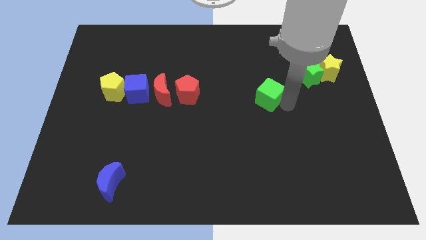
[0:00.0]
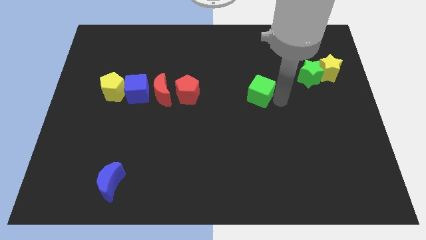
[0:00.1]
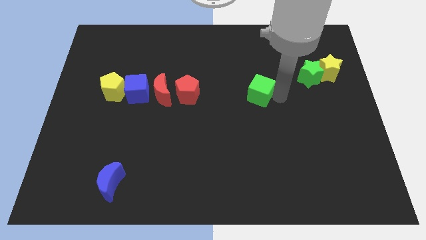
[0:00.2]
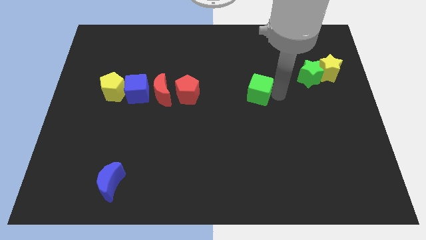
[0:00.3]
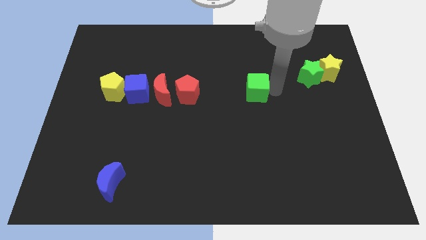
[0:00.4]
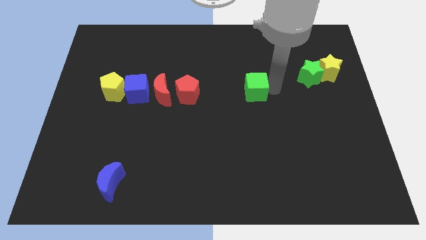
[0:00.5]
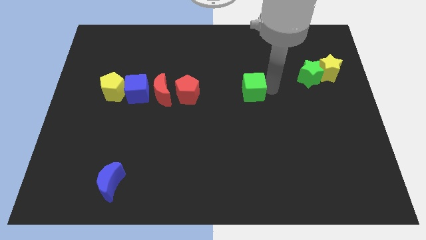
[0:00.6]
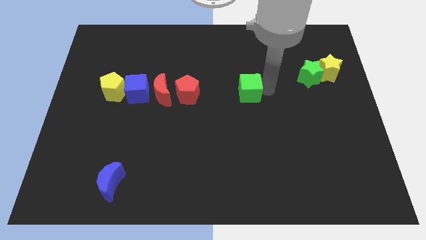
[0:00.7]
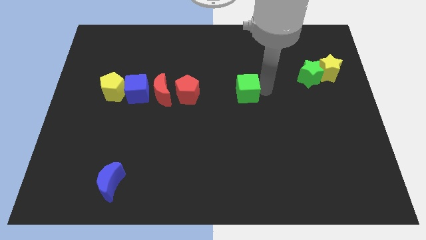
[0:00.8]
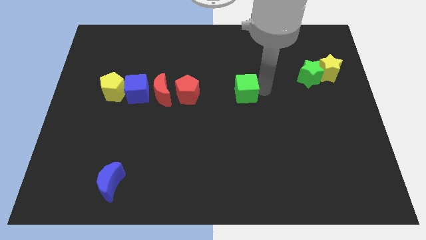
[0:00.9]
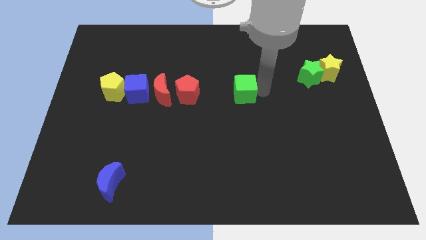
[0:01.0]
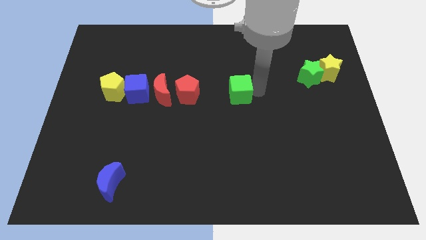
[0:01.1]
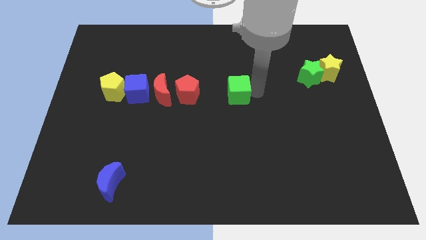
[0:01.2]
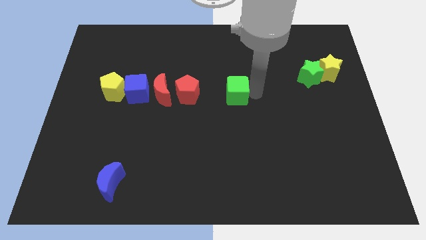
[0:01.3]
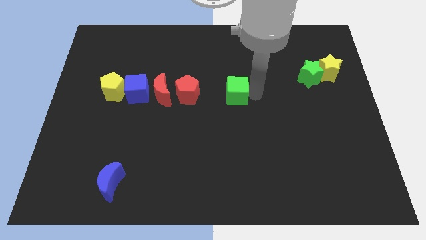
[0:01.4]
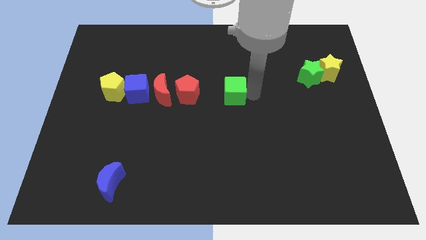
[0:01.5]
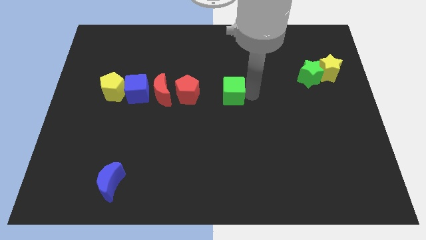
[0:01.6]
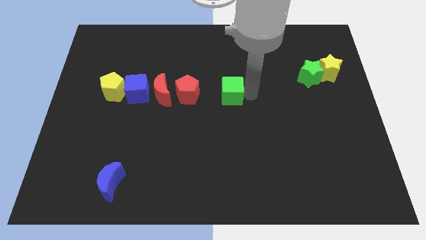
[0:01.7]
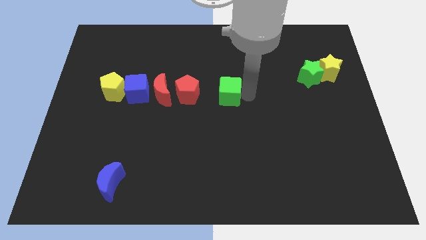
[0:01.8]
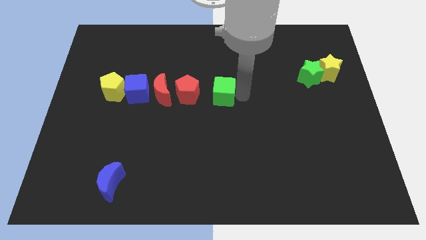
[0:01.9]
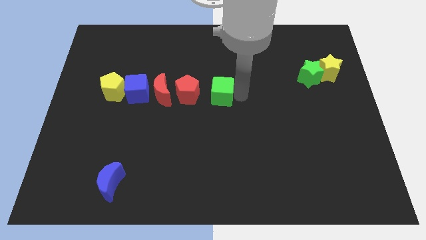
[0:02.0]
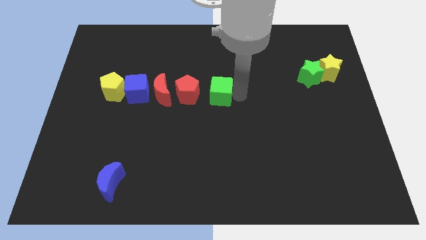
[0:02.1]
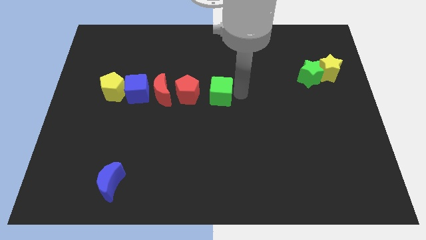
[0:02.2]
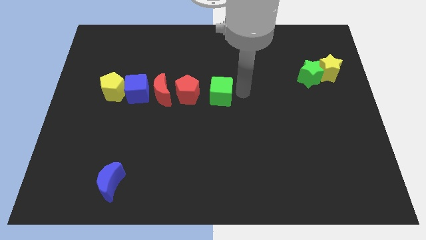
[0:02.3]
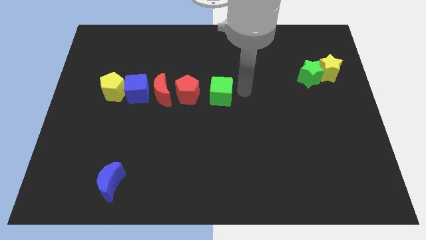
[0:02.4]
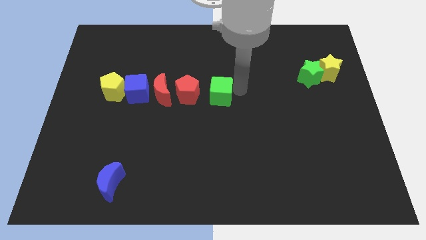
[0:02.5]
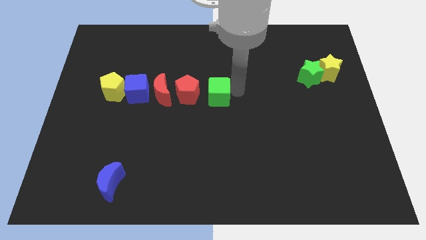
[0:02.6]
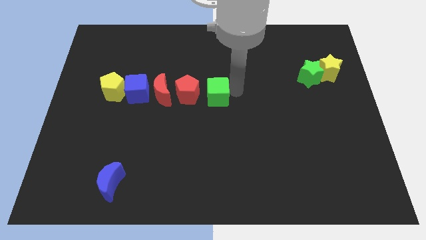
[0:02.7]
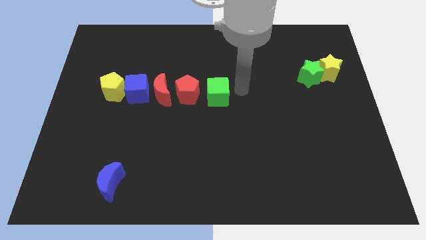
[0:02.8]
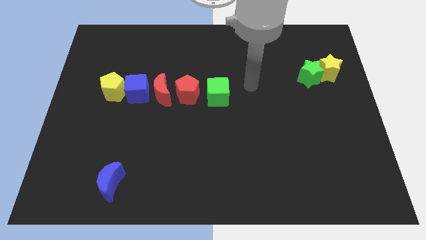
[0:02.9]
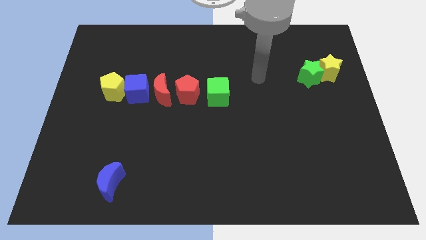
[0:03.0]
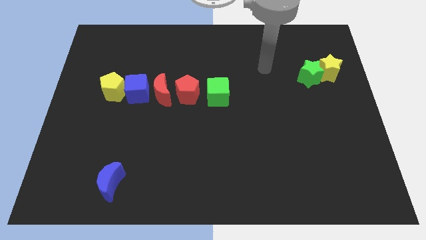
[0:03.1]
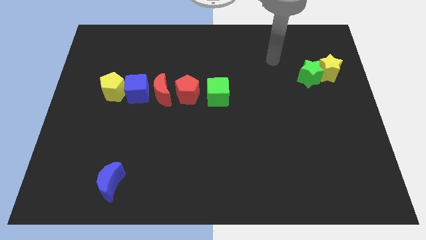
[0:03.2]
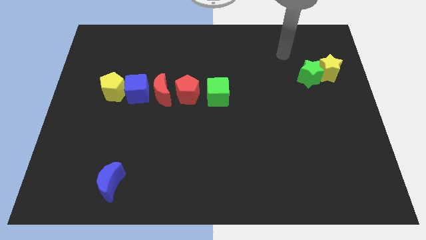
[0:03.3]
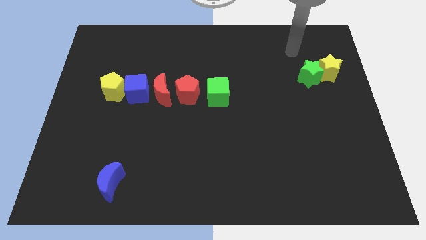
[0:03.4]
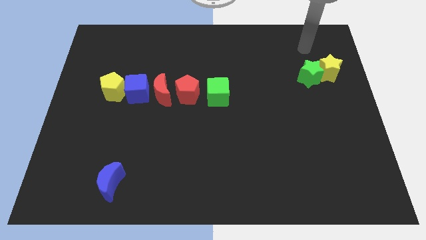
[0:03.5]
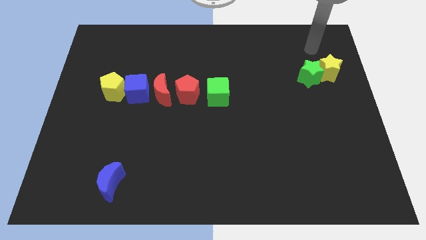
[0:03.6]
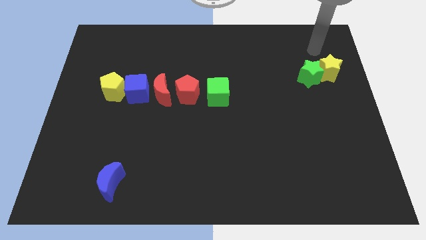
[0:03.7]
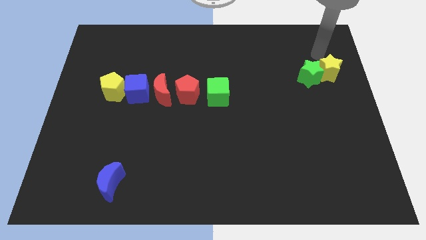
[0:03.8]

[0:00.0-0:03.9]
place your arm at the top of yellow star

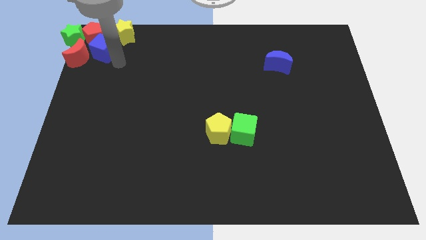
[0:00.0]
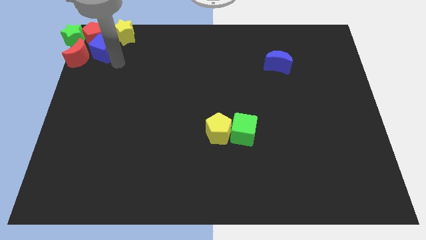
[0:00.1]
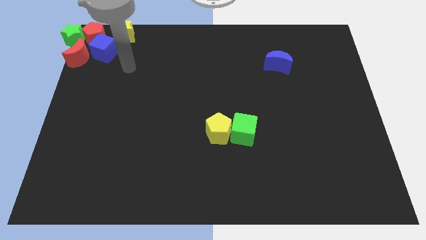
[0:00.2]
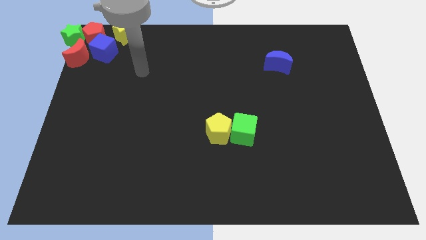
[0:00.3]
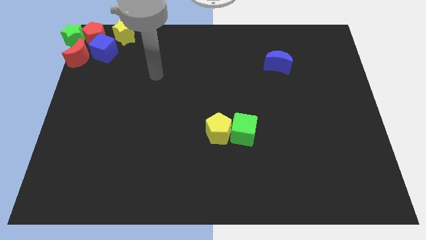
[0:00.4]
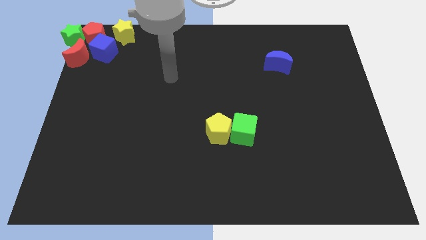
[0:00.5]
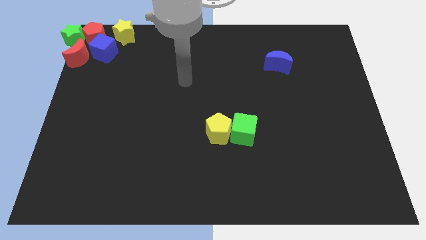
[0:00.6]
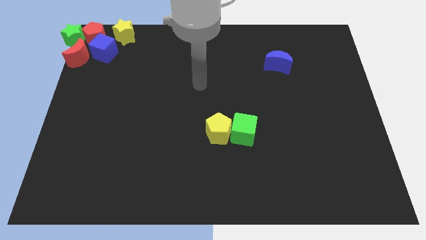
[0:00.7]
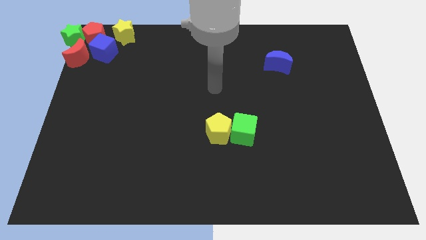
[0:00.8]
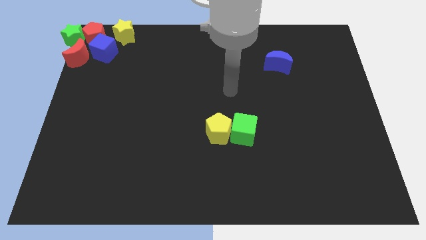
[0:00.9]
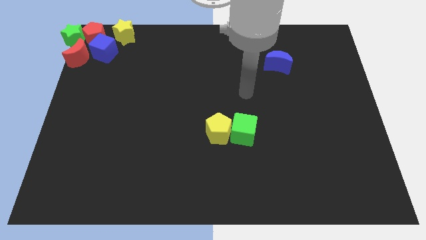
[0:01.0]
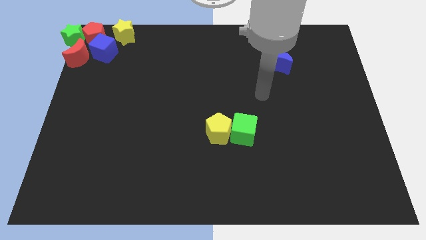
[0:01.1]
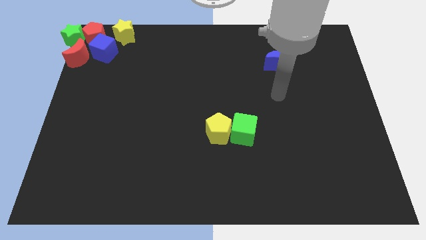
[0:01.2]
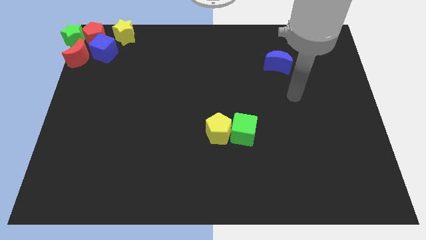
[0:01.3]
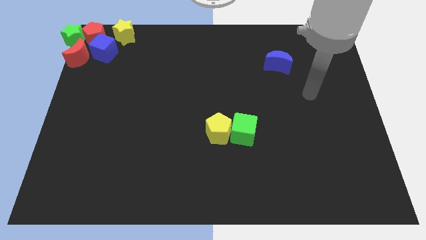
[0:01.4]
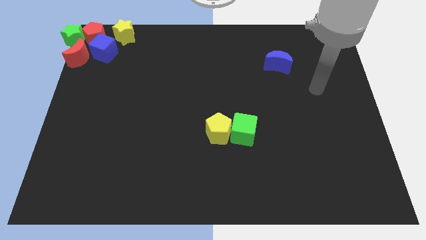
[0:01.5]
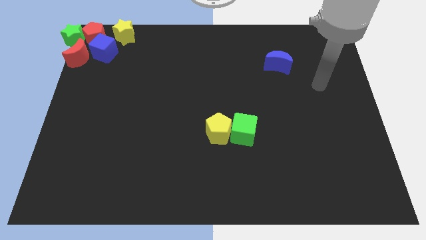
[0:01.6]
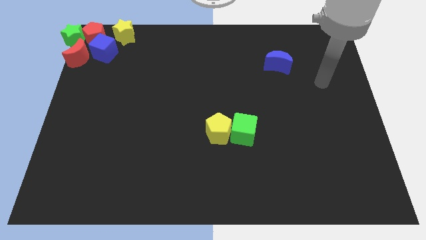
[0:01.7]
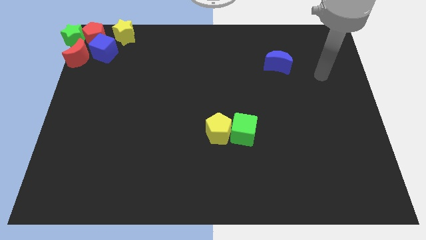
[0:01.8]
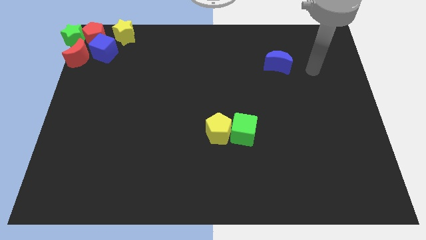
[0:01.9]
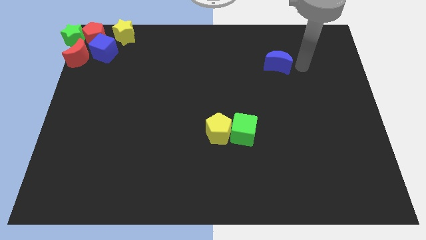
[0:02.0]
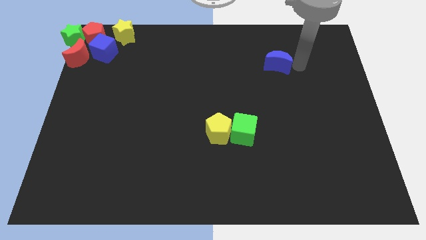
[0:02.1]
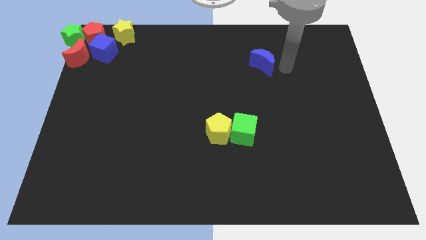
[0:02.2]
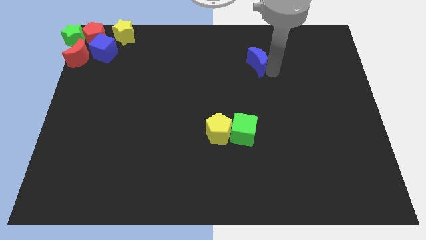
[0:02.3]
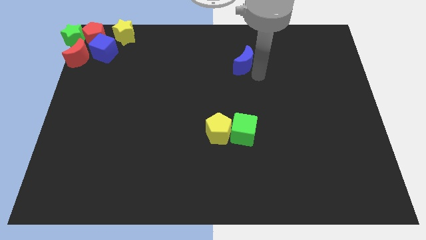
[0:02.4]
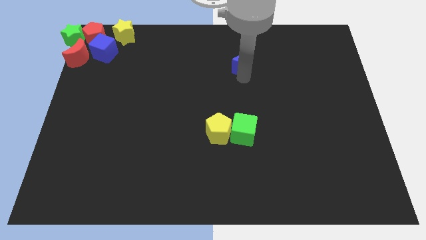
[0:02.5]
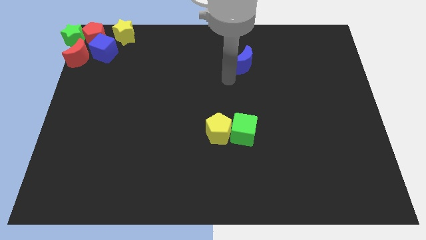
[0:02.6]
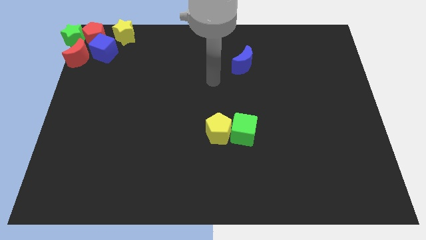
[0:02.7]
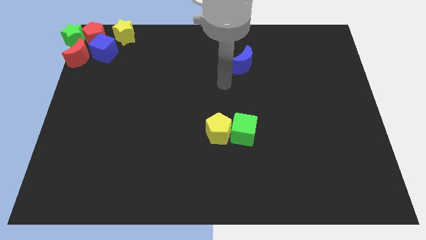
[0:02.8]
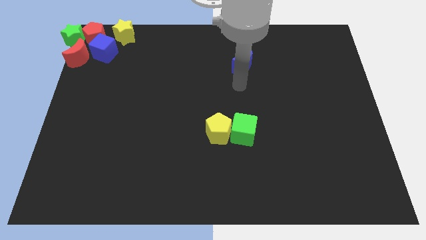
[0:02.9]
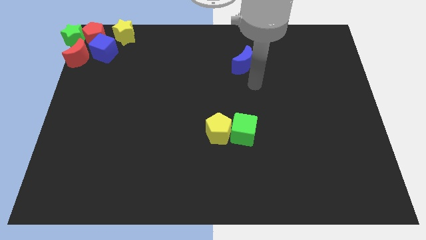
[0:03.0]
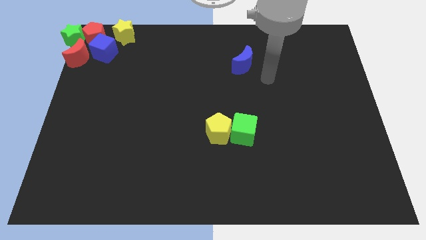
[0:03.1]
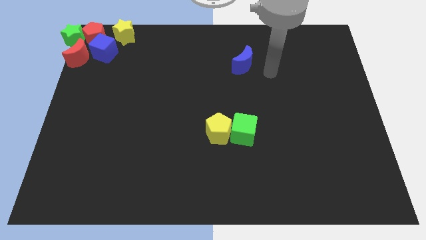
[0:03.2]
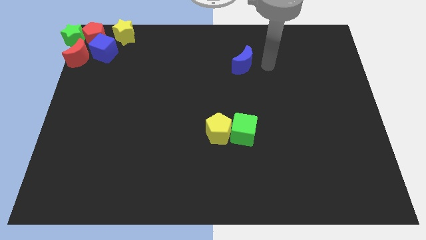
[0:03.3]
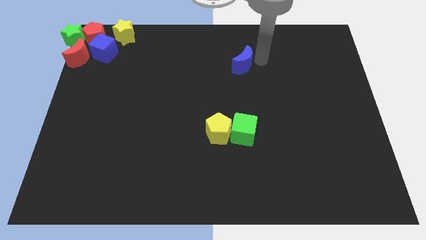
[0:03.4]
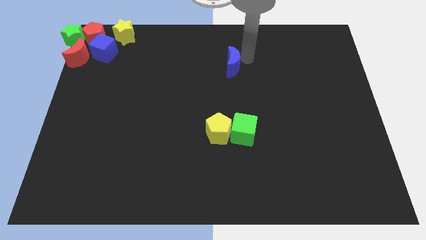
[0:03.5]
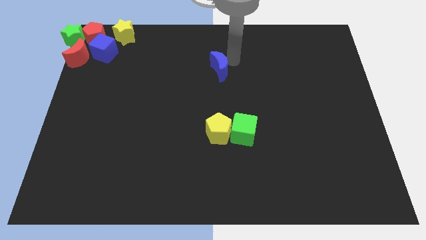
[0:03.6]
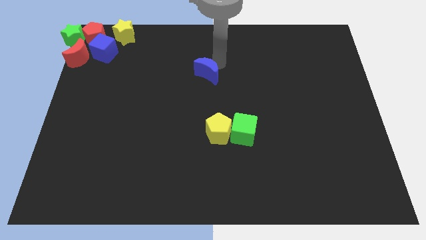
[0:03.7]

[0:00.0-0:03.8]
push the blue crescent to the top of the yellow pentagon

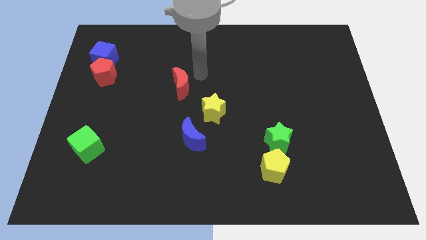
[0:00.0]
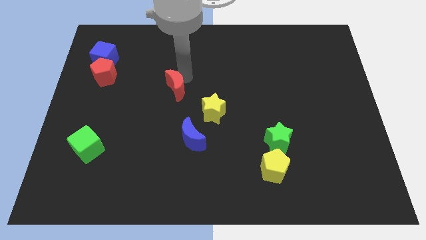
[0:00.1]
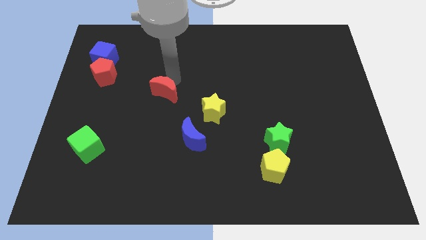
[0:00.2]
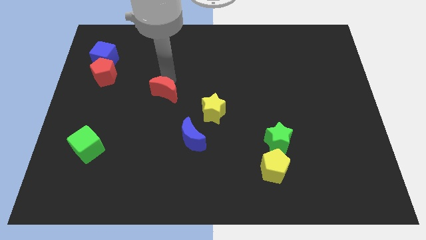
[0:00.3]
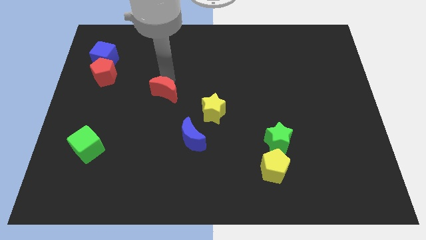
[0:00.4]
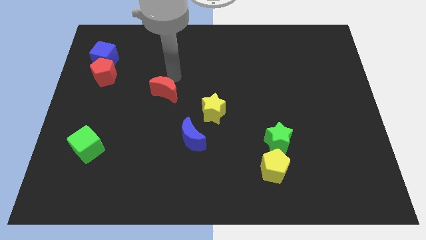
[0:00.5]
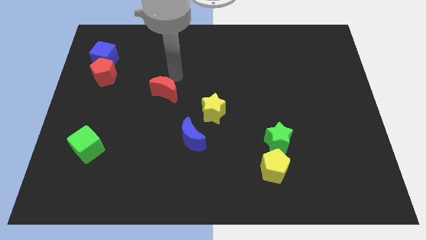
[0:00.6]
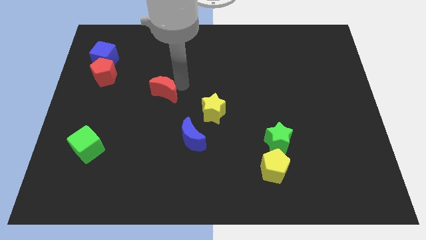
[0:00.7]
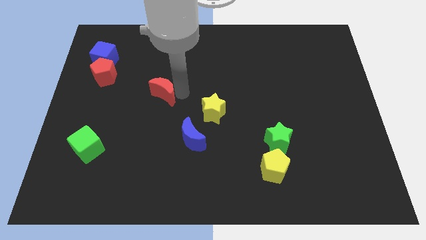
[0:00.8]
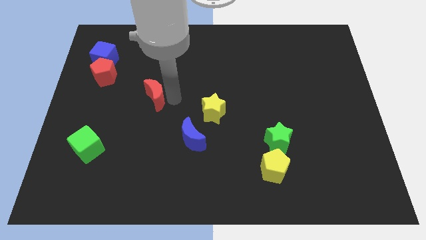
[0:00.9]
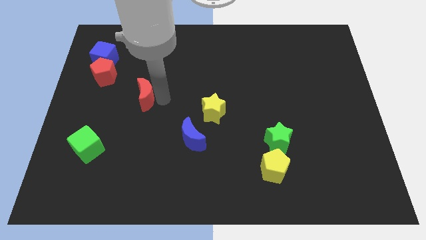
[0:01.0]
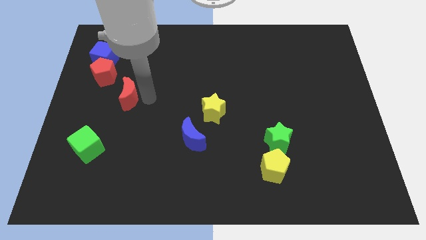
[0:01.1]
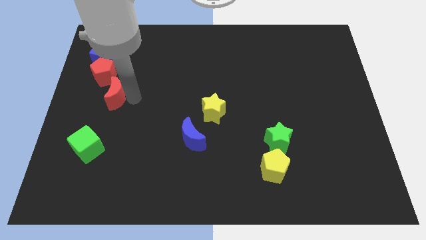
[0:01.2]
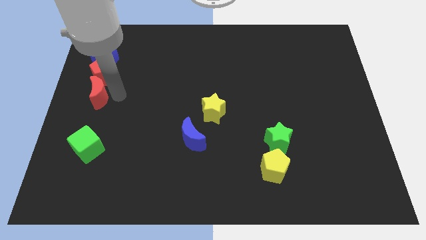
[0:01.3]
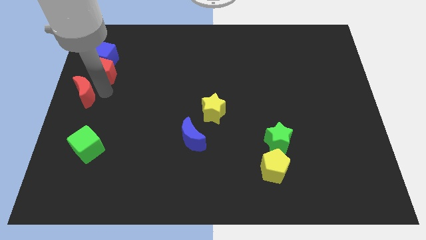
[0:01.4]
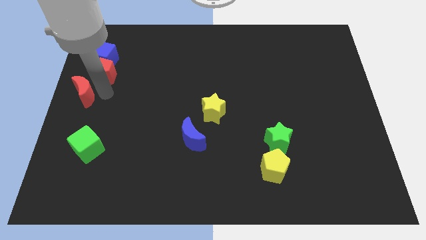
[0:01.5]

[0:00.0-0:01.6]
move the red moon towards the center left of the table
